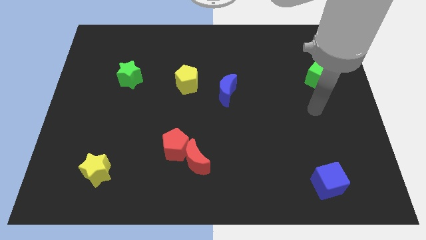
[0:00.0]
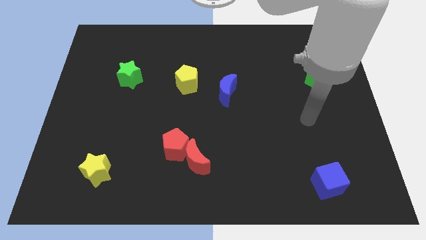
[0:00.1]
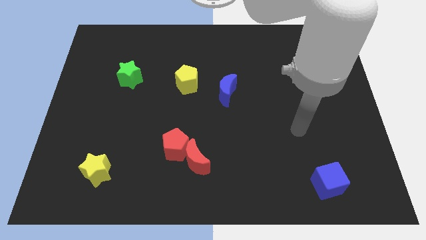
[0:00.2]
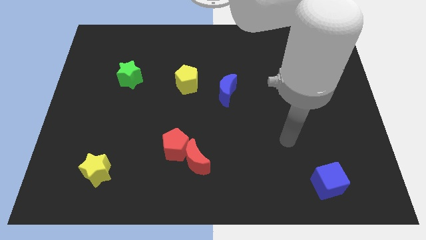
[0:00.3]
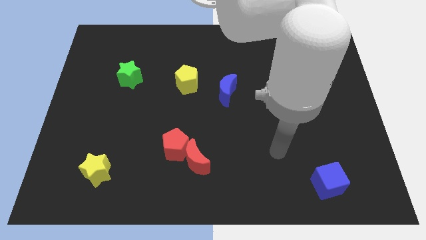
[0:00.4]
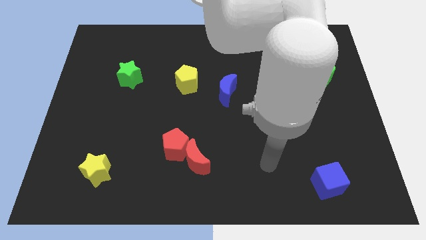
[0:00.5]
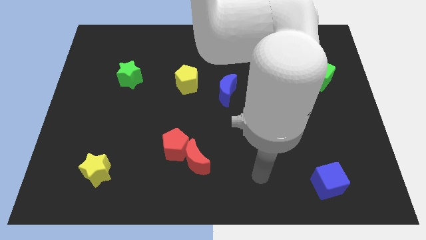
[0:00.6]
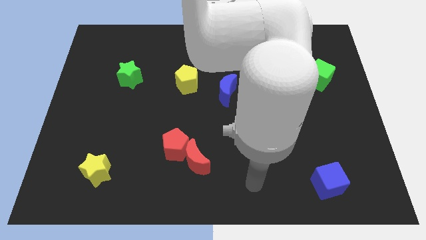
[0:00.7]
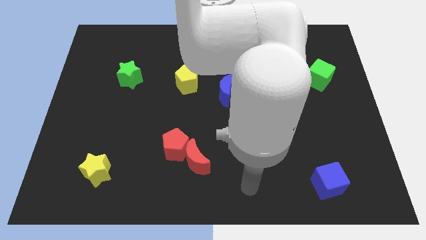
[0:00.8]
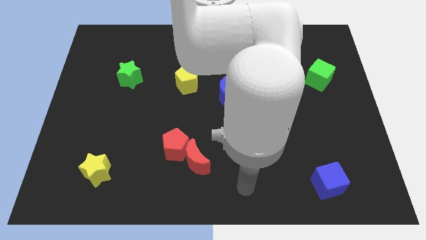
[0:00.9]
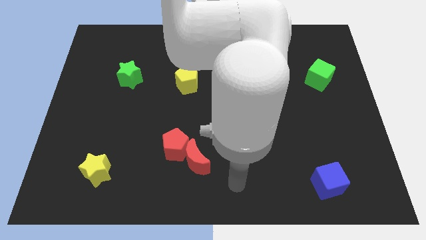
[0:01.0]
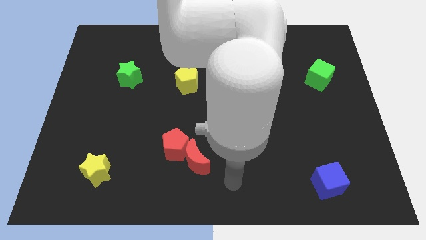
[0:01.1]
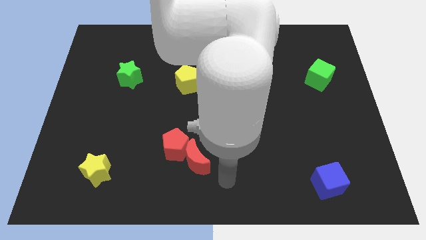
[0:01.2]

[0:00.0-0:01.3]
place arm at bottom center

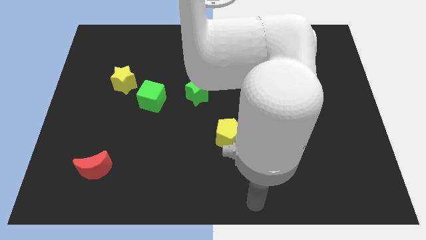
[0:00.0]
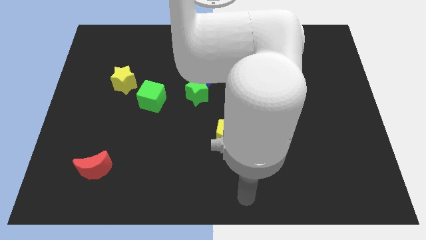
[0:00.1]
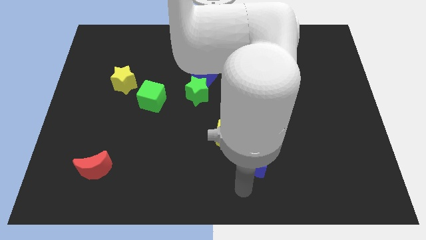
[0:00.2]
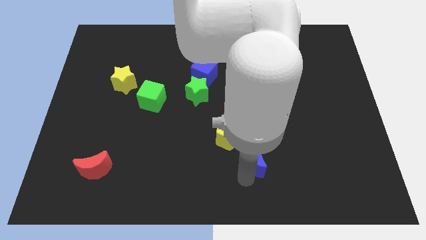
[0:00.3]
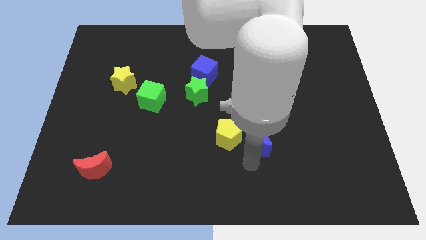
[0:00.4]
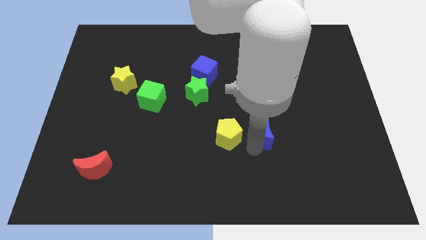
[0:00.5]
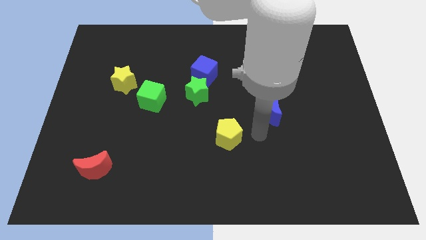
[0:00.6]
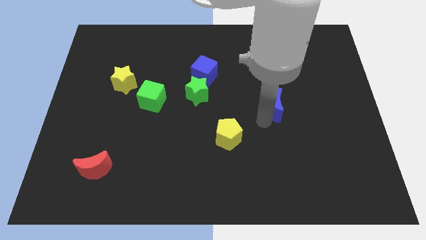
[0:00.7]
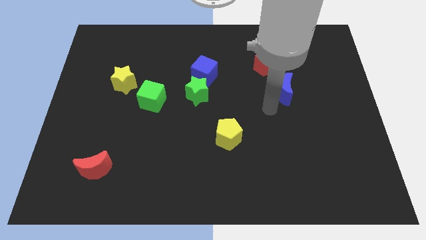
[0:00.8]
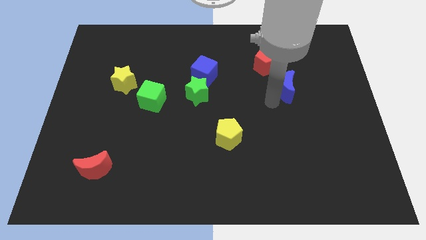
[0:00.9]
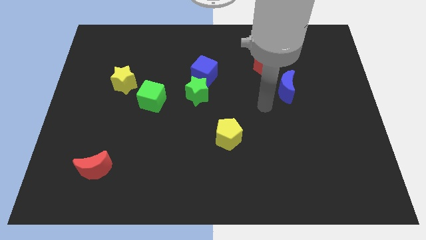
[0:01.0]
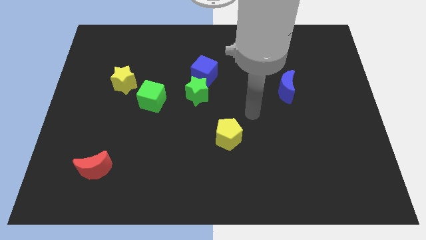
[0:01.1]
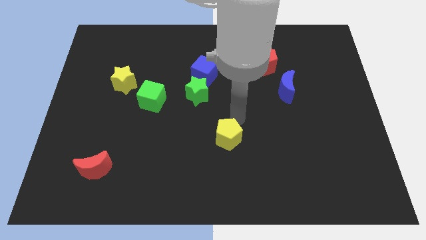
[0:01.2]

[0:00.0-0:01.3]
push the blue crescent to the bottom right side of the red pentagon

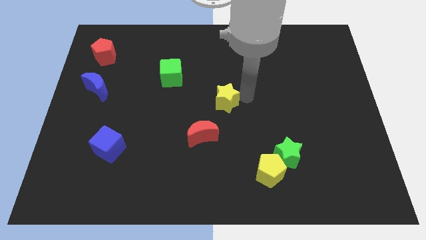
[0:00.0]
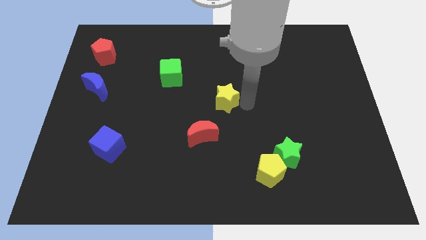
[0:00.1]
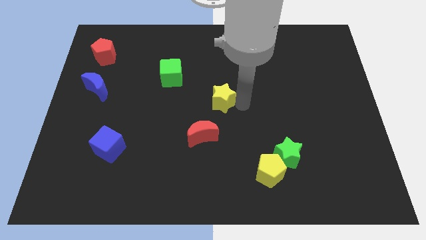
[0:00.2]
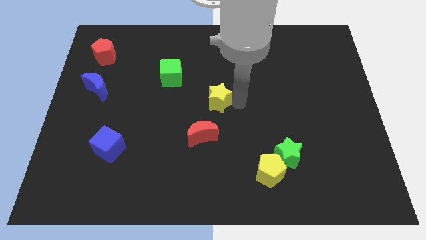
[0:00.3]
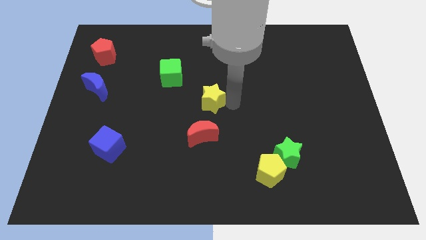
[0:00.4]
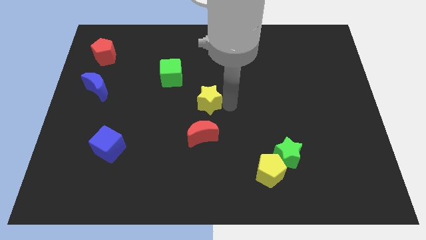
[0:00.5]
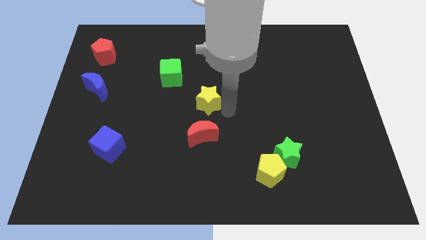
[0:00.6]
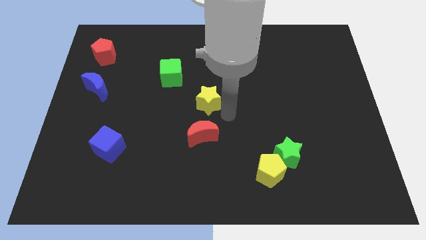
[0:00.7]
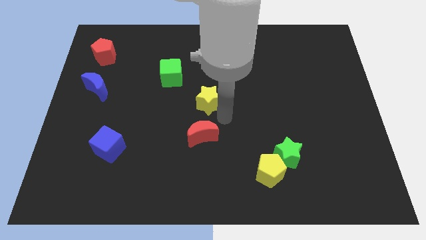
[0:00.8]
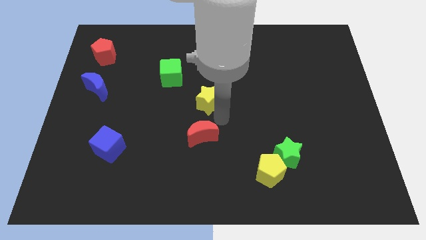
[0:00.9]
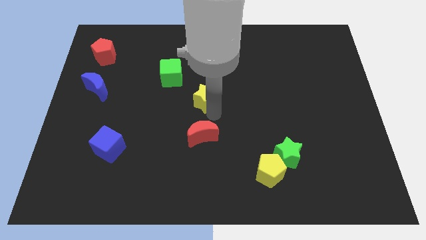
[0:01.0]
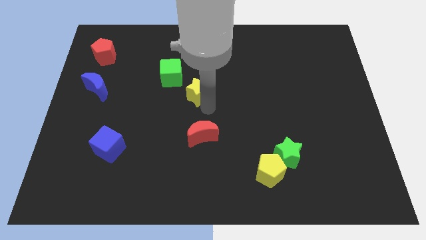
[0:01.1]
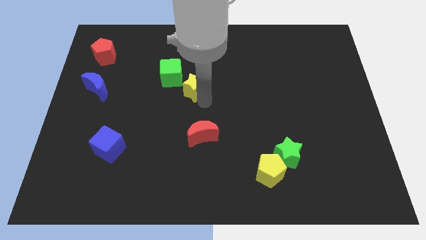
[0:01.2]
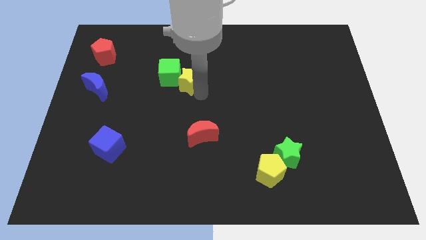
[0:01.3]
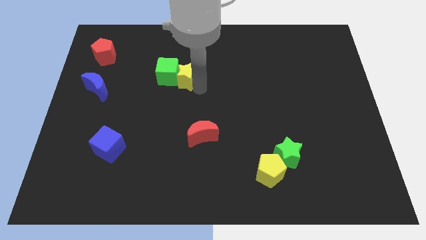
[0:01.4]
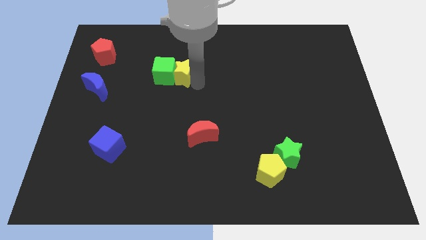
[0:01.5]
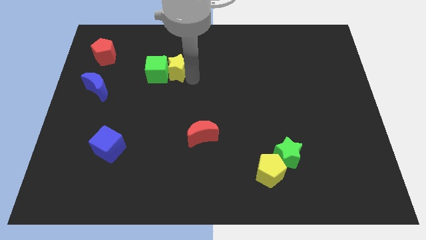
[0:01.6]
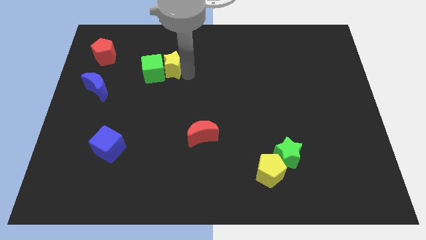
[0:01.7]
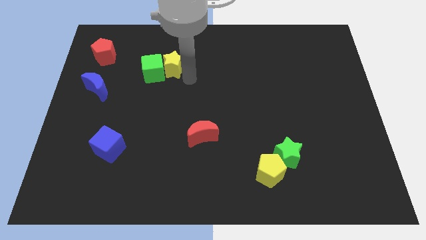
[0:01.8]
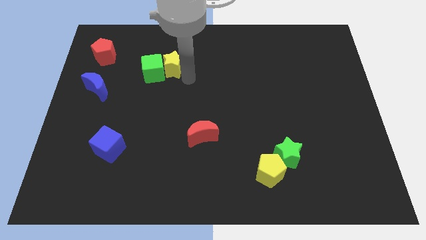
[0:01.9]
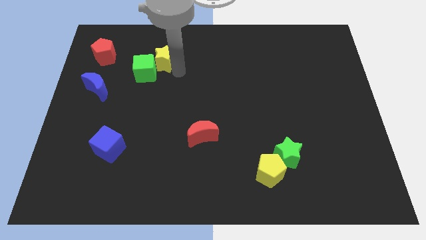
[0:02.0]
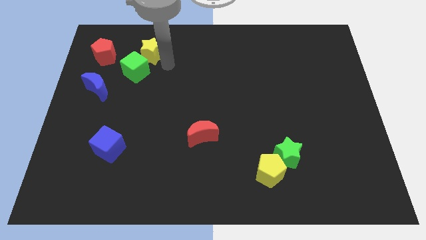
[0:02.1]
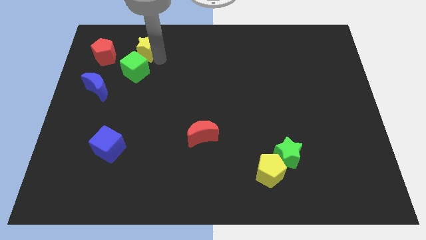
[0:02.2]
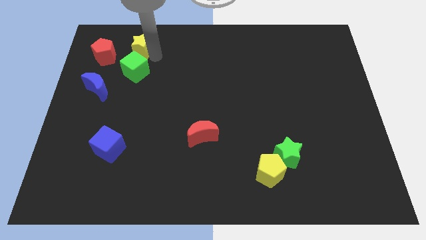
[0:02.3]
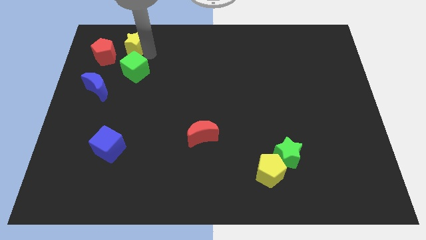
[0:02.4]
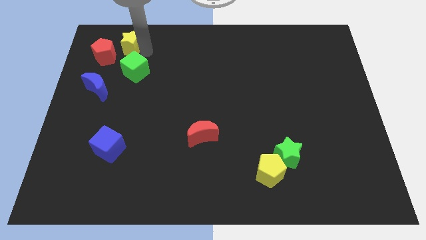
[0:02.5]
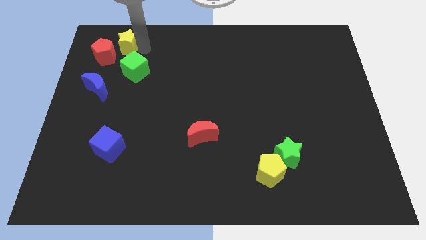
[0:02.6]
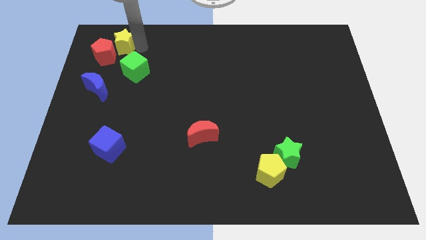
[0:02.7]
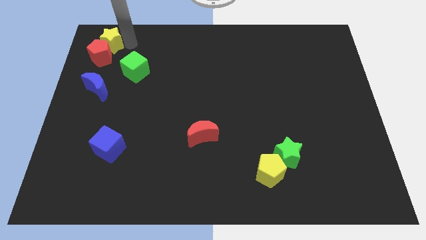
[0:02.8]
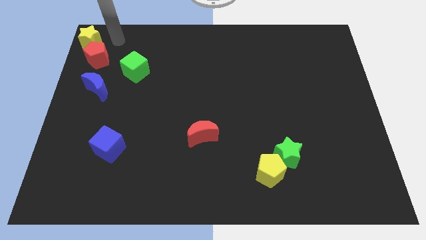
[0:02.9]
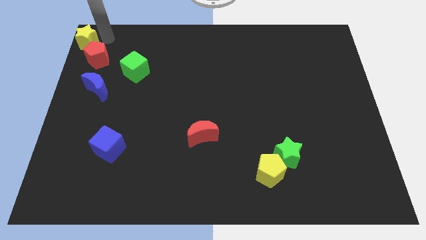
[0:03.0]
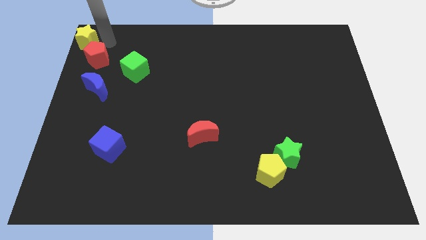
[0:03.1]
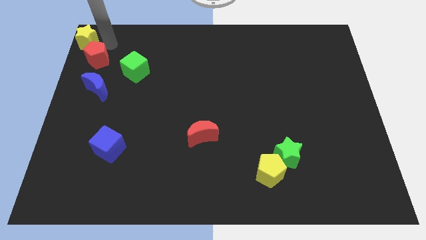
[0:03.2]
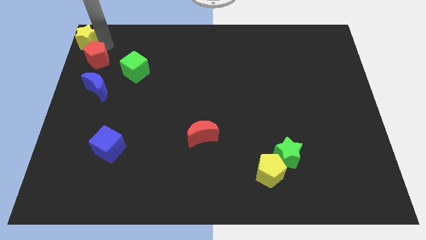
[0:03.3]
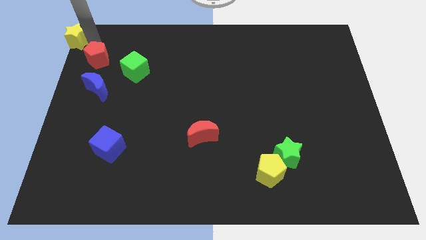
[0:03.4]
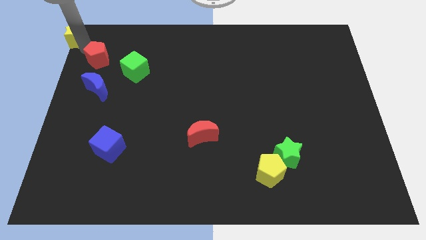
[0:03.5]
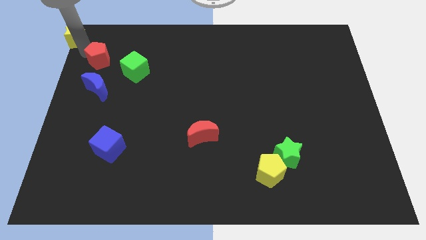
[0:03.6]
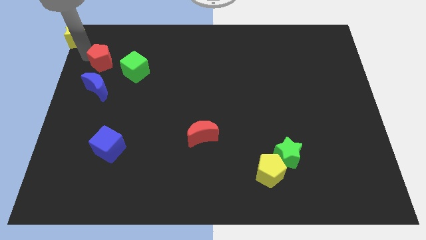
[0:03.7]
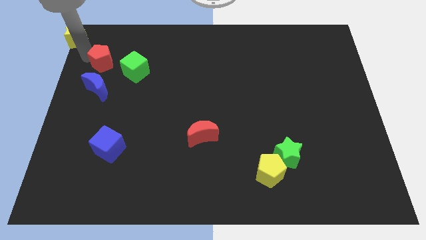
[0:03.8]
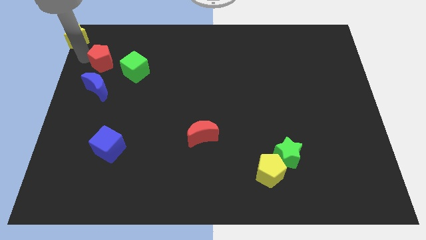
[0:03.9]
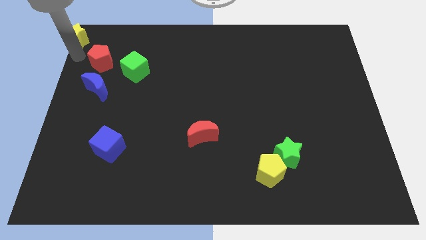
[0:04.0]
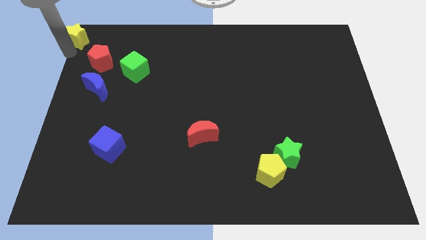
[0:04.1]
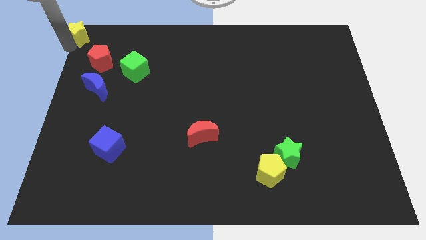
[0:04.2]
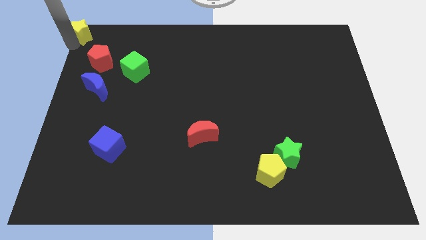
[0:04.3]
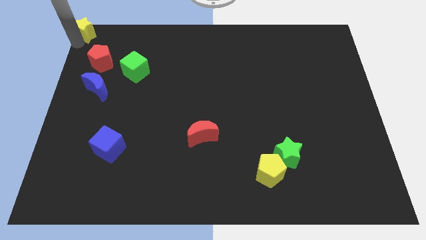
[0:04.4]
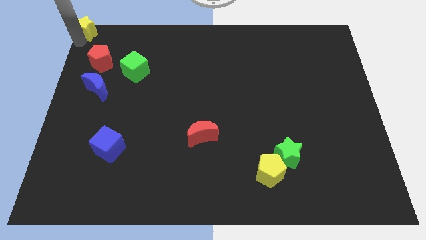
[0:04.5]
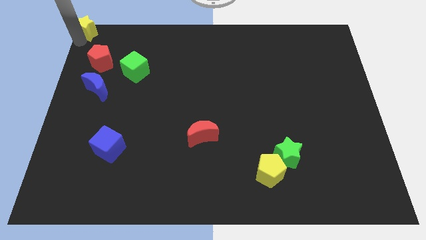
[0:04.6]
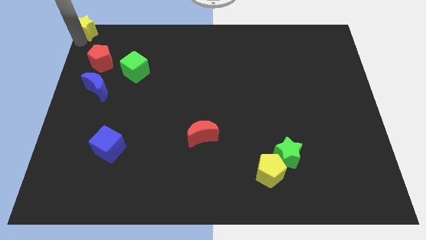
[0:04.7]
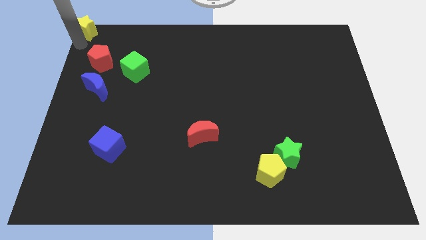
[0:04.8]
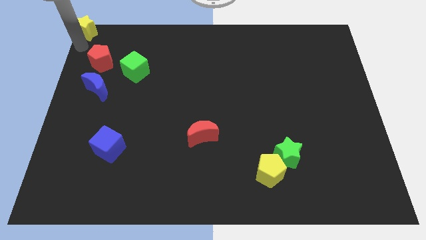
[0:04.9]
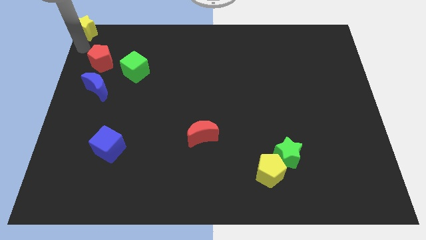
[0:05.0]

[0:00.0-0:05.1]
drag the yellow star to the top left corner of the board

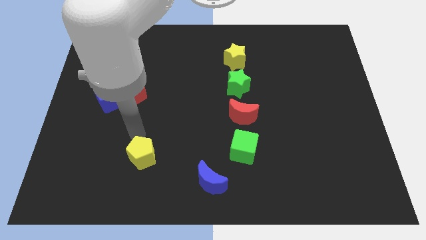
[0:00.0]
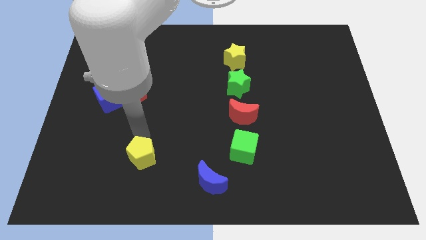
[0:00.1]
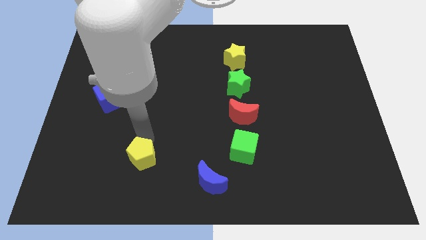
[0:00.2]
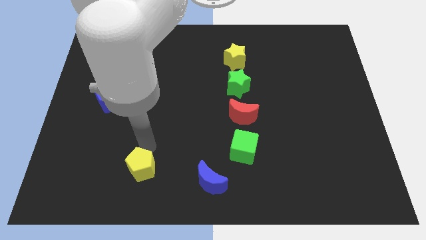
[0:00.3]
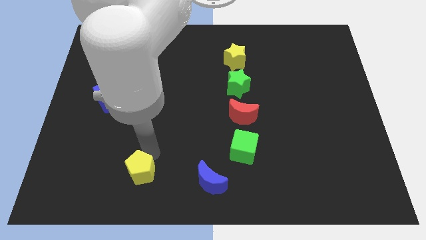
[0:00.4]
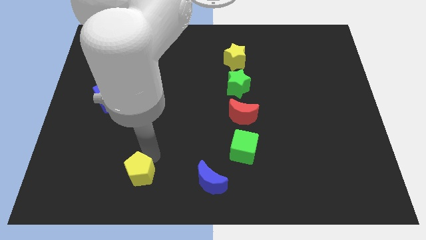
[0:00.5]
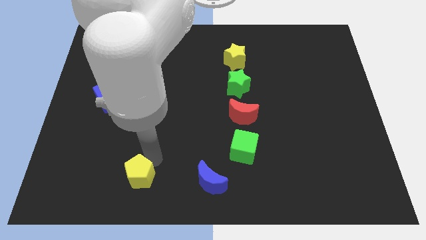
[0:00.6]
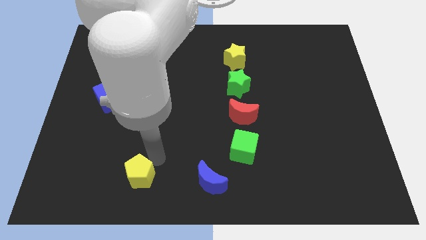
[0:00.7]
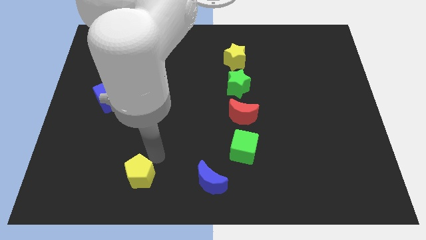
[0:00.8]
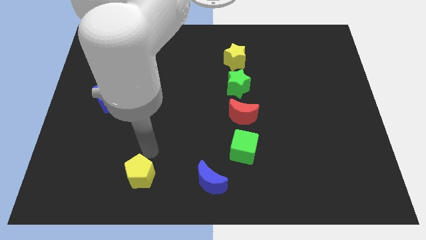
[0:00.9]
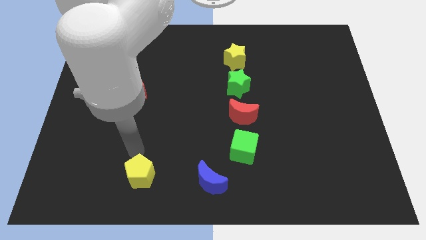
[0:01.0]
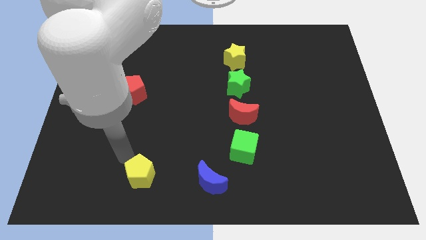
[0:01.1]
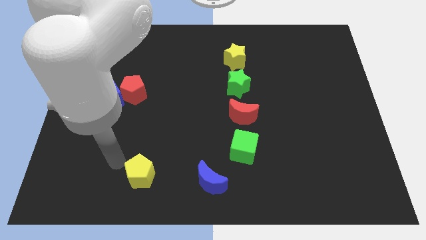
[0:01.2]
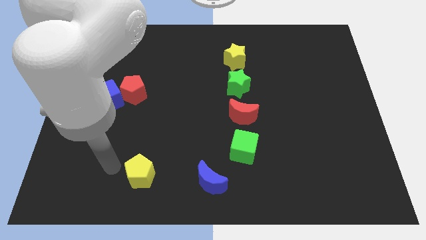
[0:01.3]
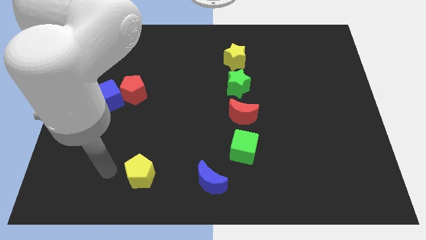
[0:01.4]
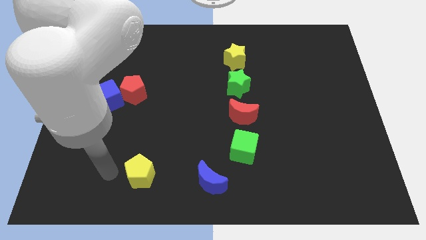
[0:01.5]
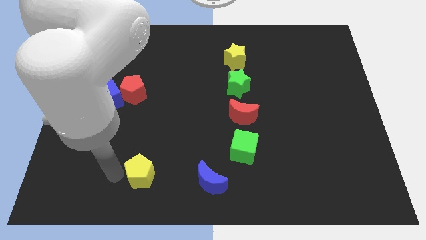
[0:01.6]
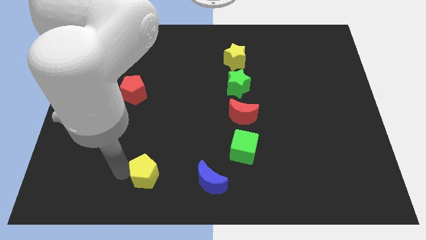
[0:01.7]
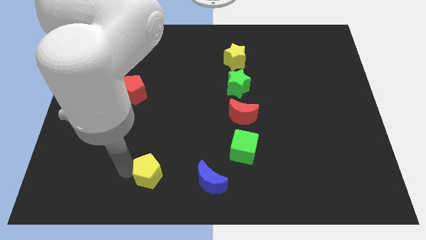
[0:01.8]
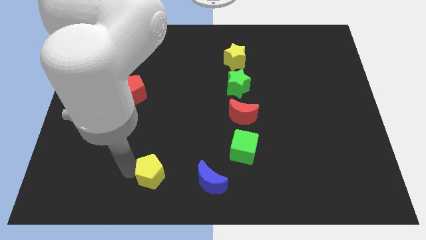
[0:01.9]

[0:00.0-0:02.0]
move the yellow pentagon to the left of the blue crescent
